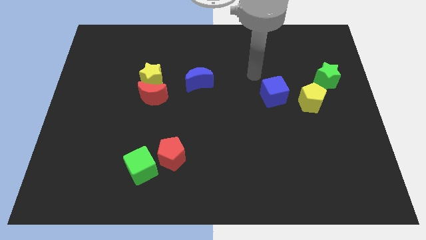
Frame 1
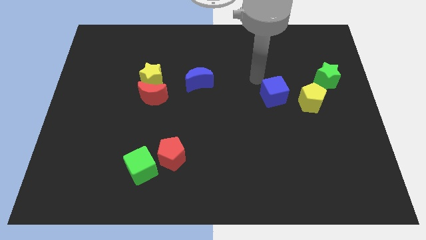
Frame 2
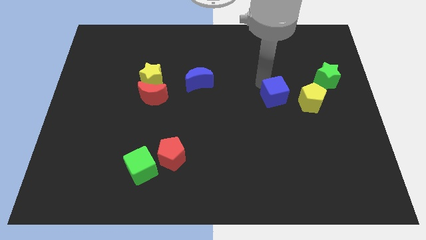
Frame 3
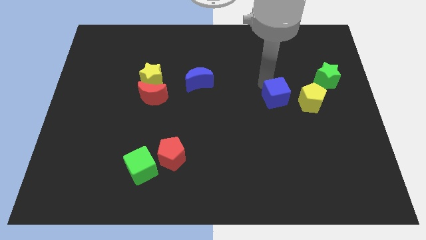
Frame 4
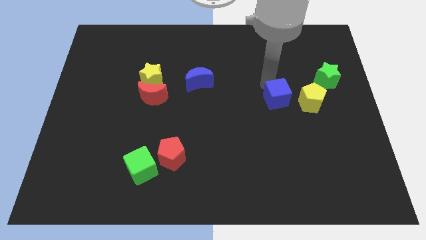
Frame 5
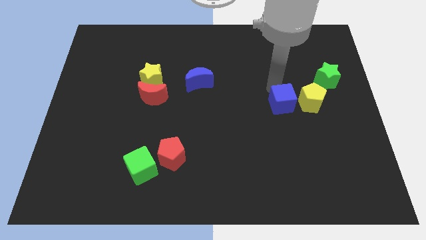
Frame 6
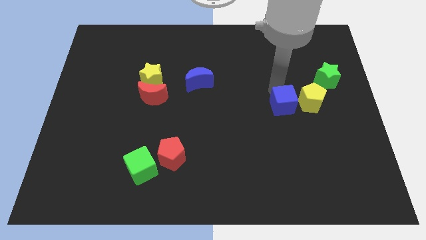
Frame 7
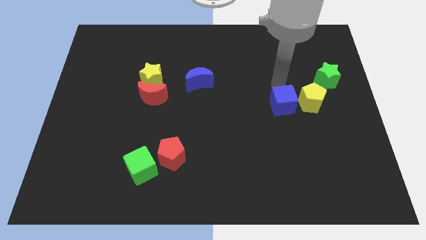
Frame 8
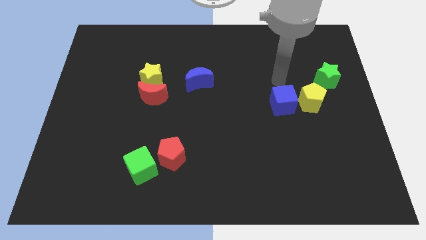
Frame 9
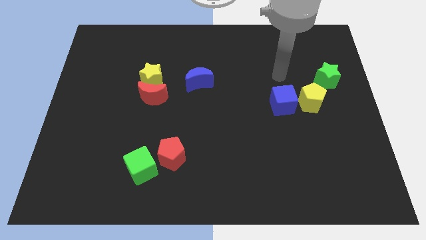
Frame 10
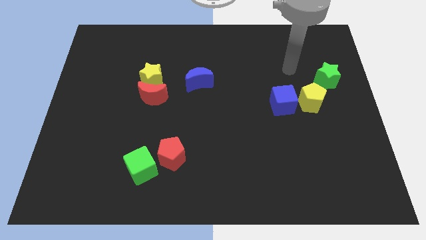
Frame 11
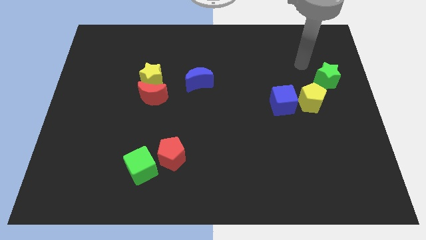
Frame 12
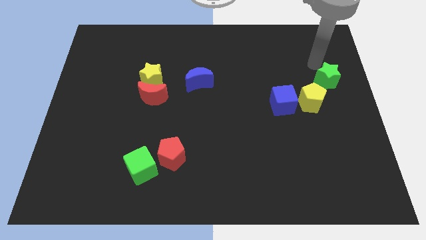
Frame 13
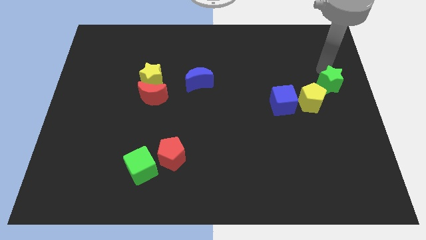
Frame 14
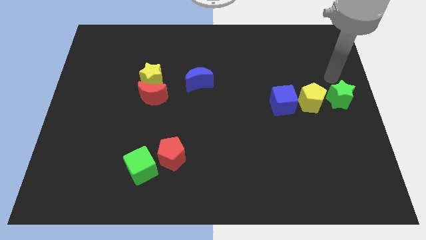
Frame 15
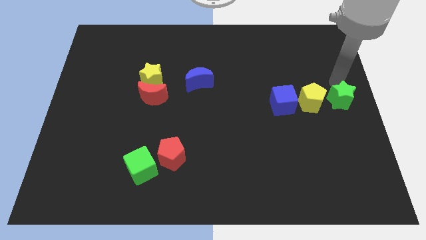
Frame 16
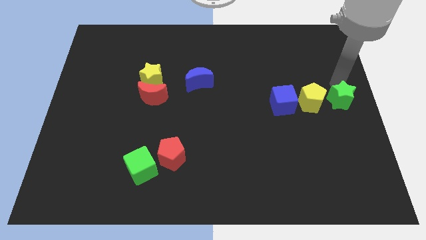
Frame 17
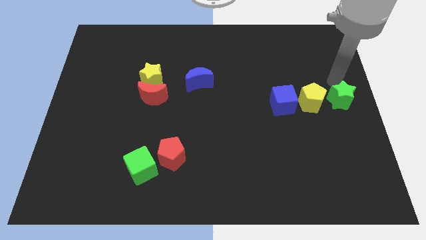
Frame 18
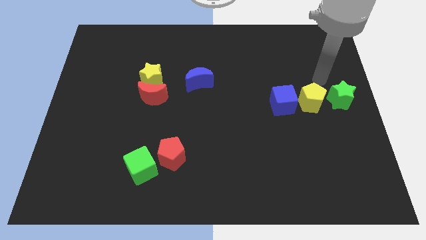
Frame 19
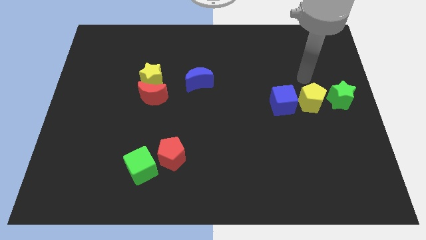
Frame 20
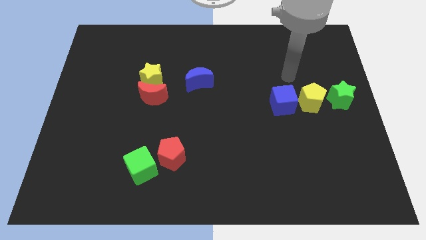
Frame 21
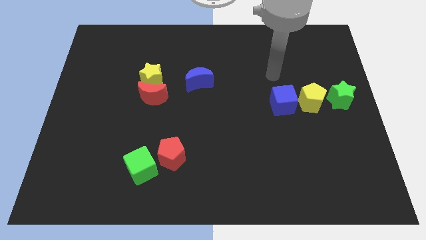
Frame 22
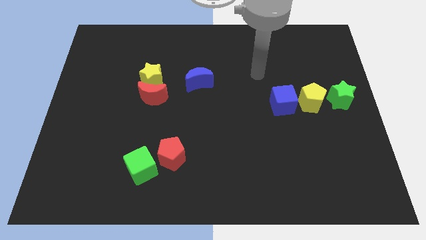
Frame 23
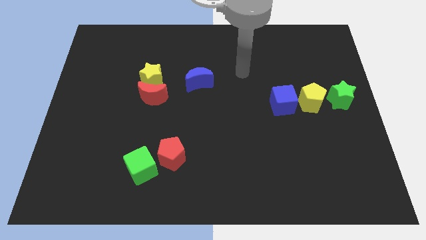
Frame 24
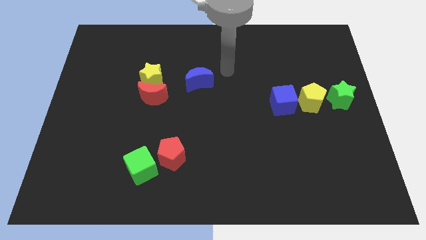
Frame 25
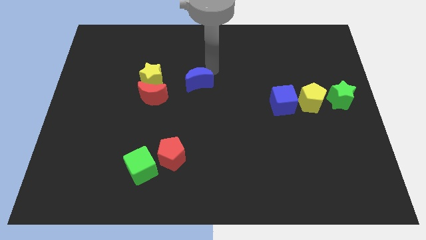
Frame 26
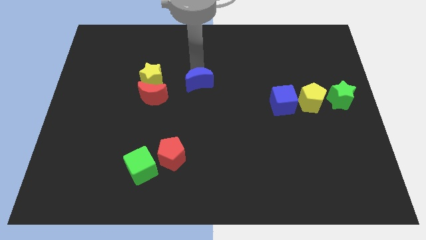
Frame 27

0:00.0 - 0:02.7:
place the arm above the blue moon

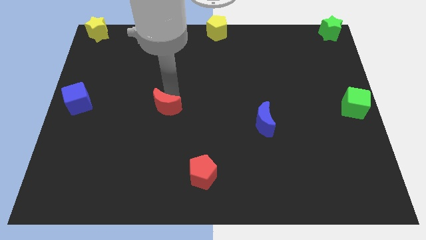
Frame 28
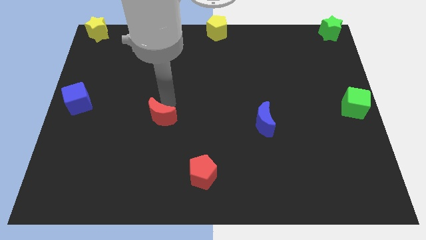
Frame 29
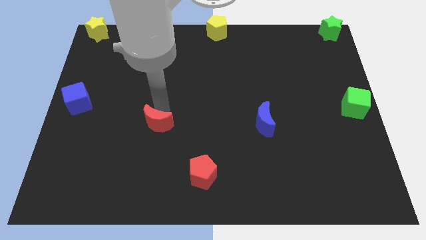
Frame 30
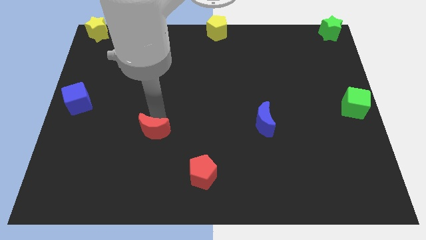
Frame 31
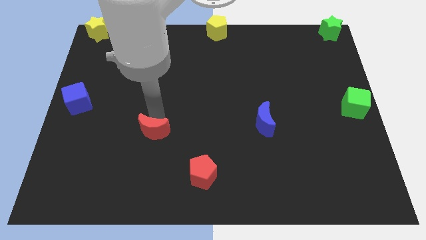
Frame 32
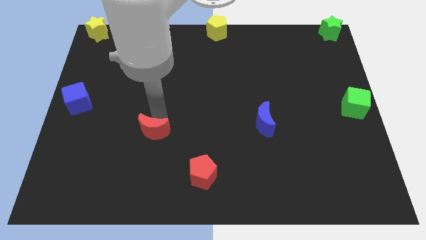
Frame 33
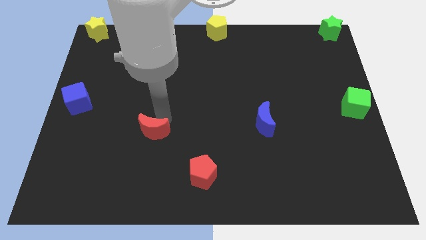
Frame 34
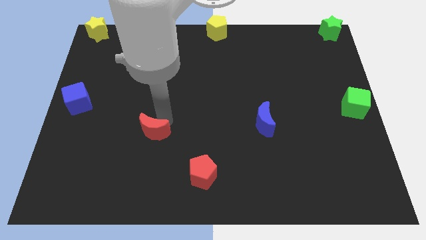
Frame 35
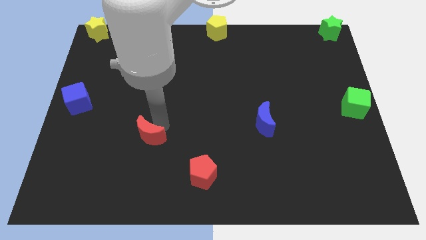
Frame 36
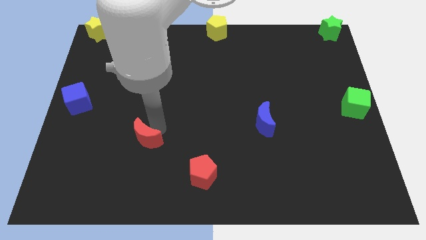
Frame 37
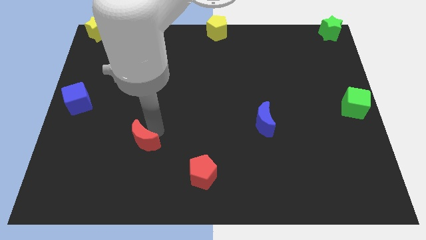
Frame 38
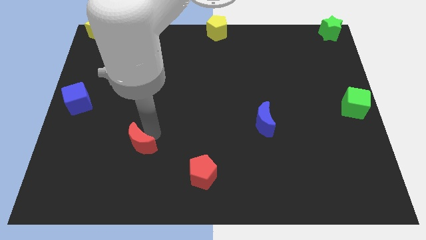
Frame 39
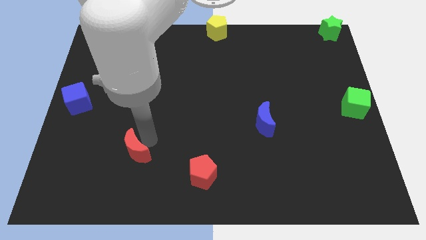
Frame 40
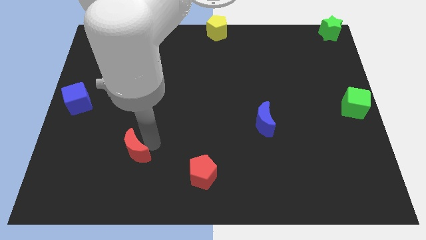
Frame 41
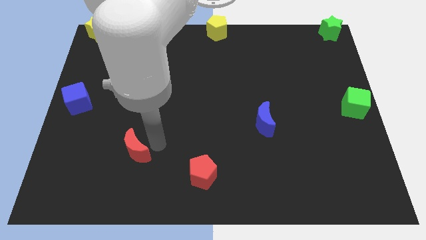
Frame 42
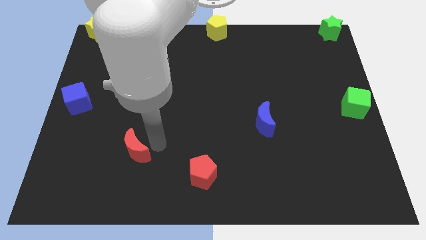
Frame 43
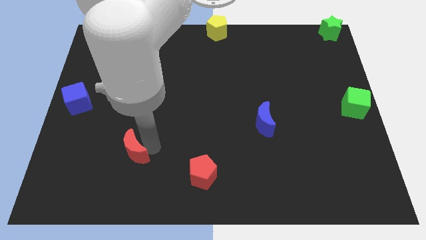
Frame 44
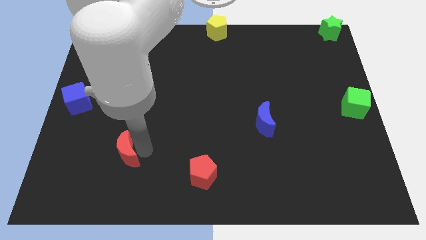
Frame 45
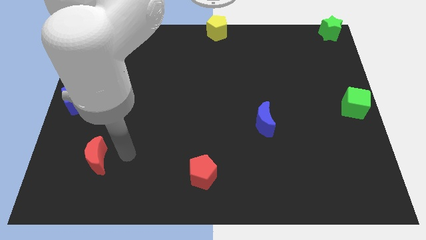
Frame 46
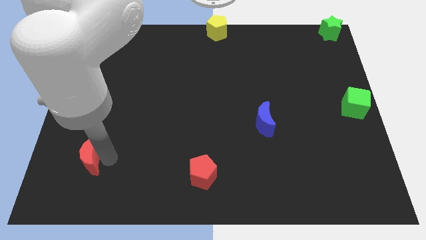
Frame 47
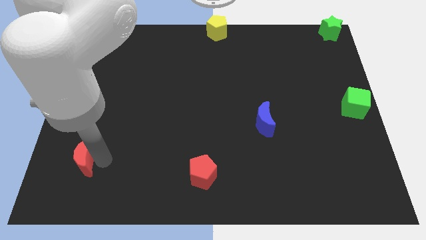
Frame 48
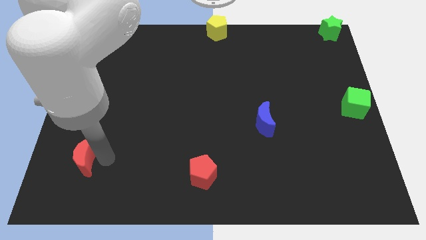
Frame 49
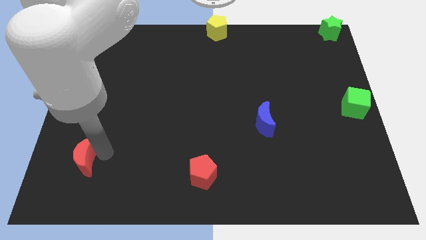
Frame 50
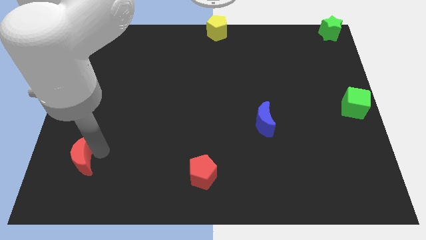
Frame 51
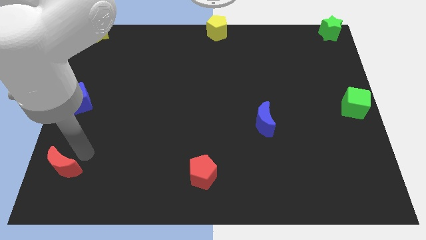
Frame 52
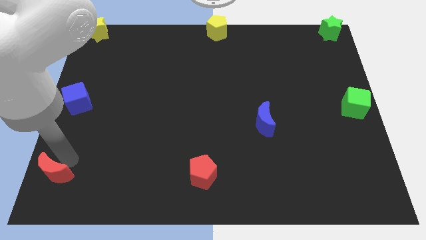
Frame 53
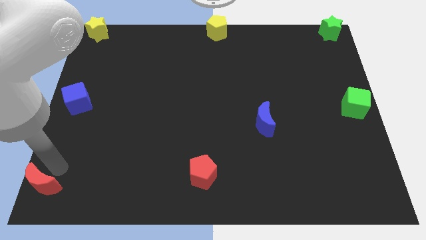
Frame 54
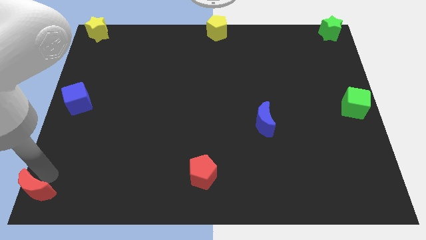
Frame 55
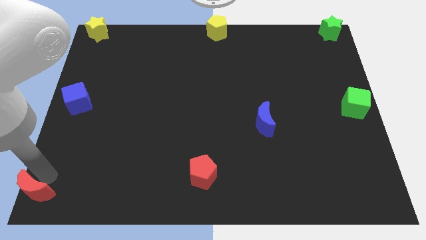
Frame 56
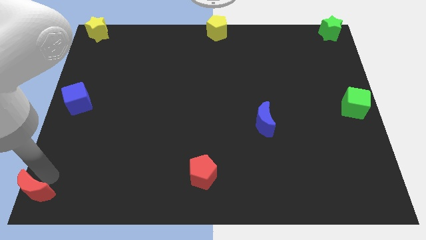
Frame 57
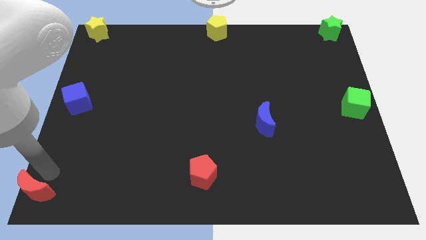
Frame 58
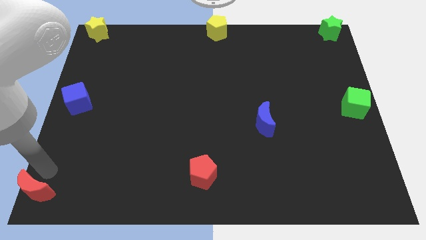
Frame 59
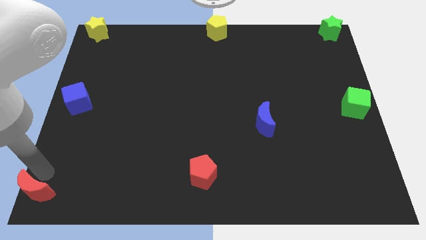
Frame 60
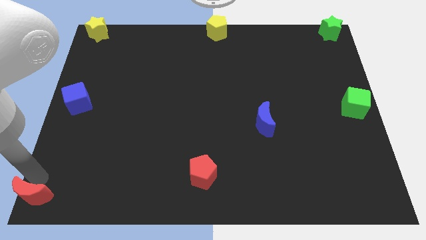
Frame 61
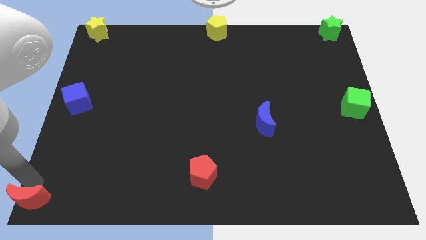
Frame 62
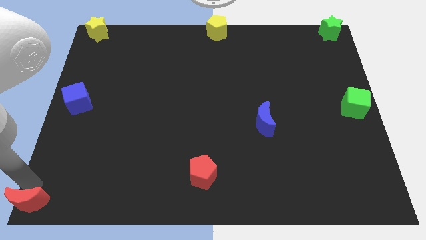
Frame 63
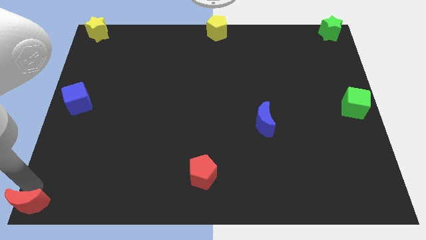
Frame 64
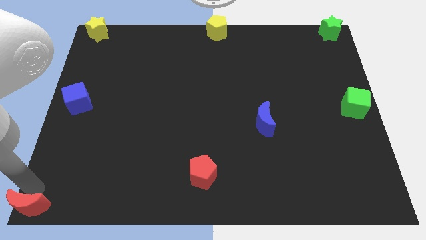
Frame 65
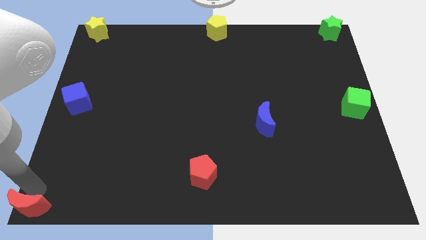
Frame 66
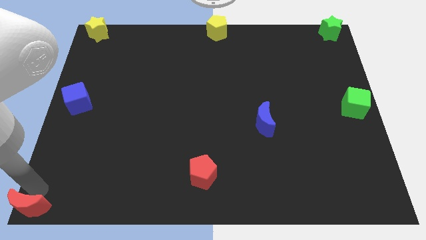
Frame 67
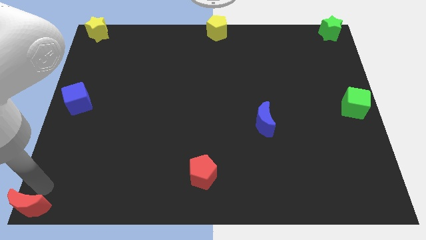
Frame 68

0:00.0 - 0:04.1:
put the red moon at the bottom left corner of the board

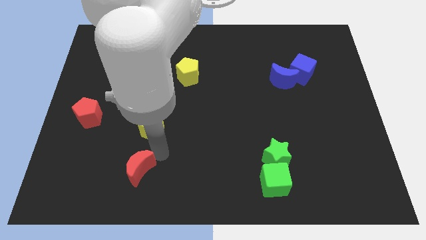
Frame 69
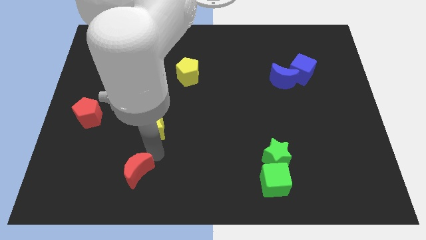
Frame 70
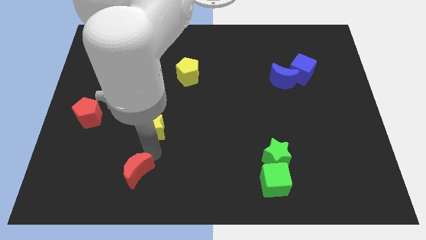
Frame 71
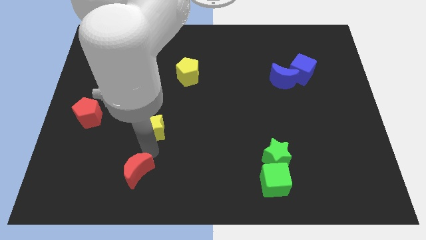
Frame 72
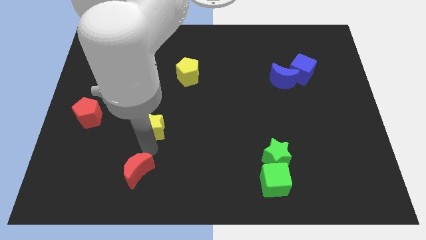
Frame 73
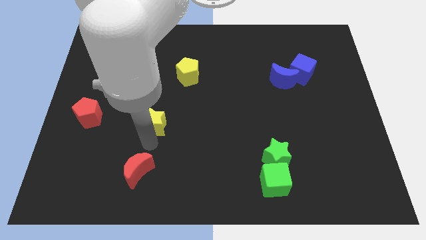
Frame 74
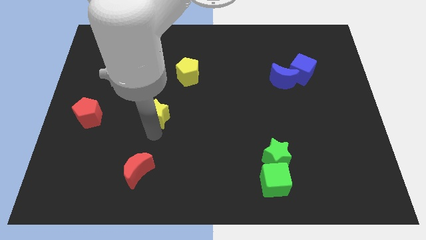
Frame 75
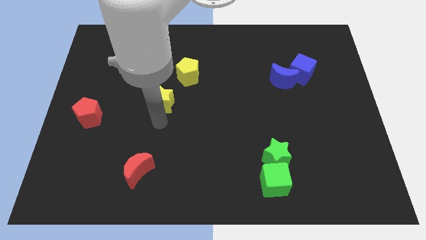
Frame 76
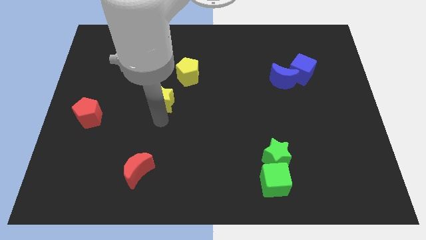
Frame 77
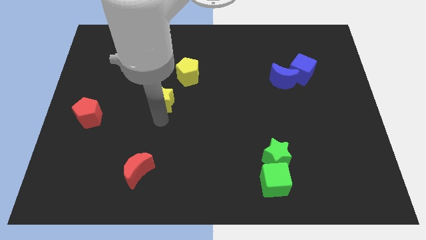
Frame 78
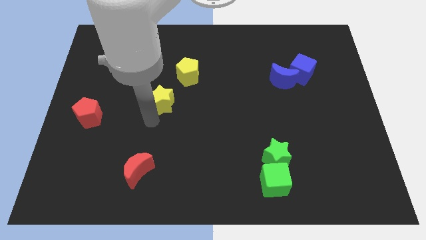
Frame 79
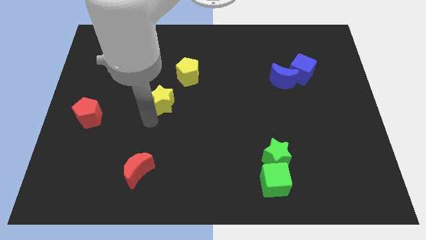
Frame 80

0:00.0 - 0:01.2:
place yellow star diagonally to the yellow pentagon

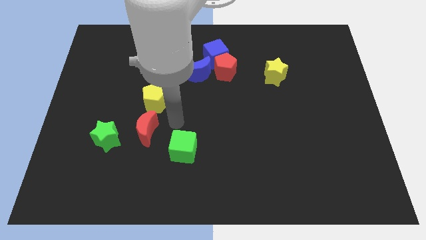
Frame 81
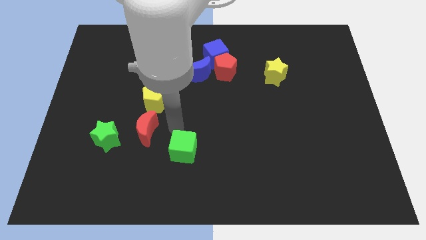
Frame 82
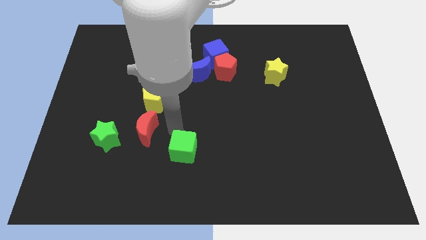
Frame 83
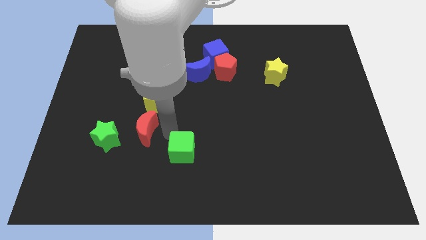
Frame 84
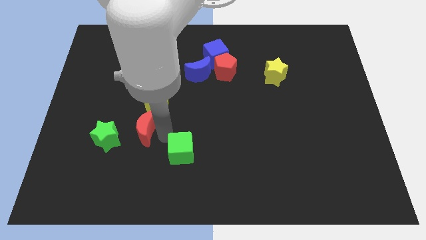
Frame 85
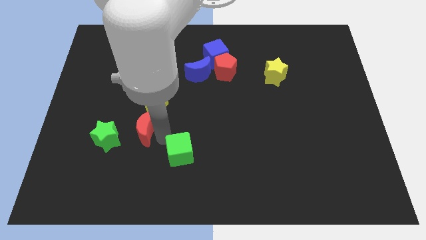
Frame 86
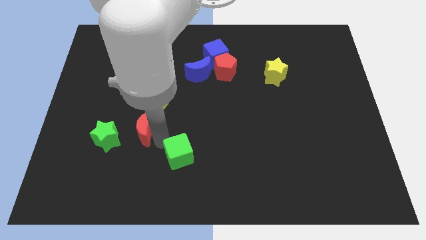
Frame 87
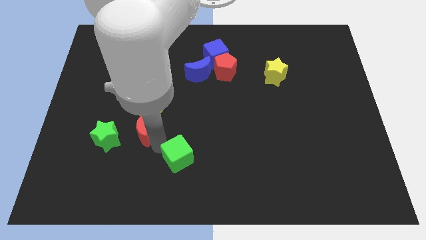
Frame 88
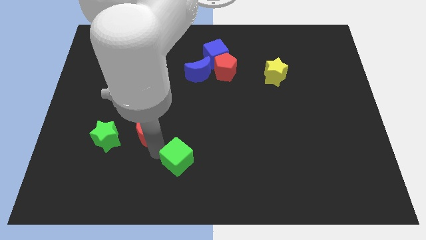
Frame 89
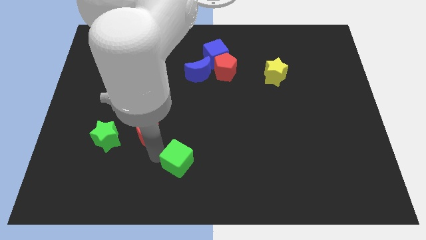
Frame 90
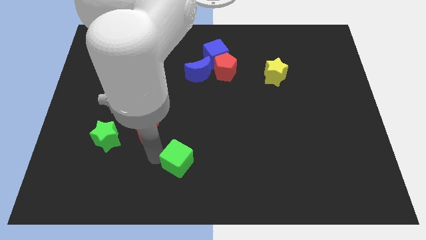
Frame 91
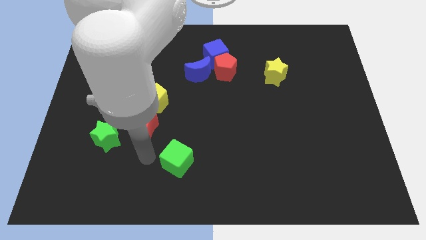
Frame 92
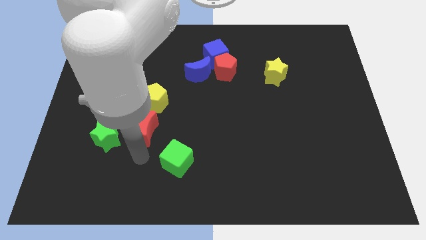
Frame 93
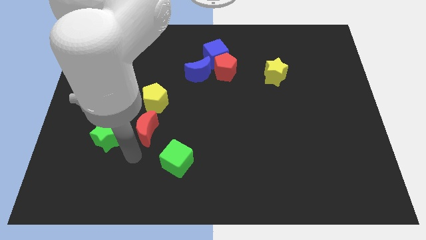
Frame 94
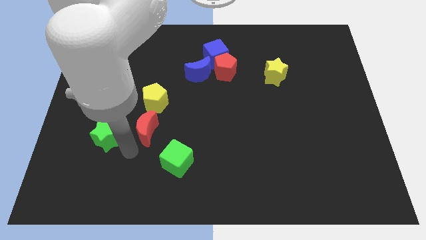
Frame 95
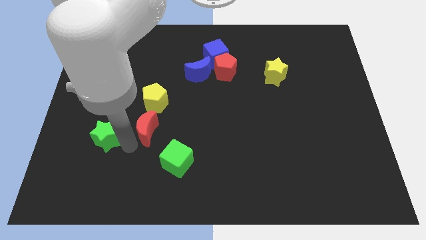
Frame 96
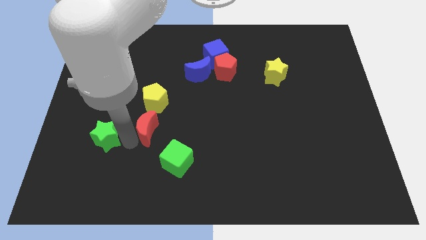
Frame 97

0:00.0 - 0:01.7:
slightly move the green cube towards down
